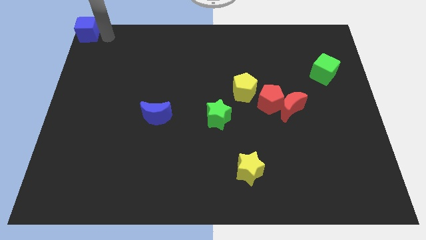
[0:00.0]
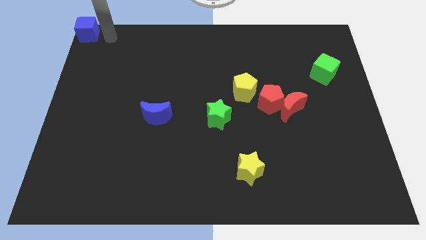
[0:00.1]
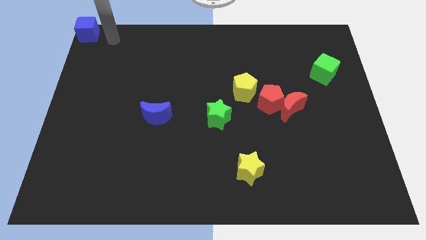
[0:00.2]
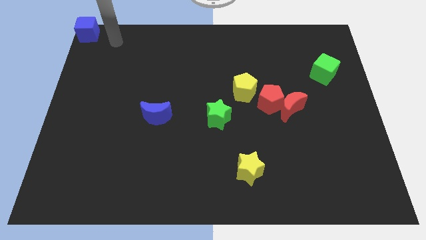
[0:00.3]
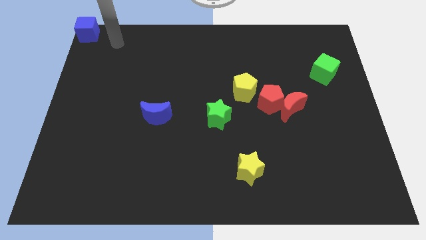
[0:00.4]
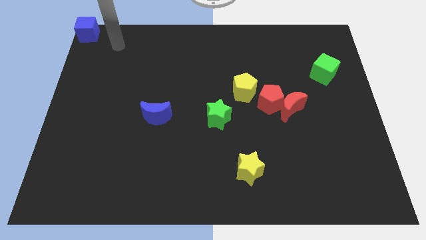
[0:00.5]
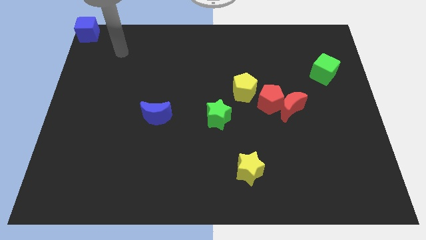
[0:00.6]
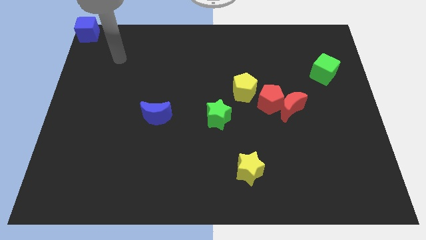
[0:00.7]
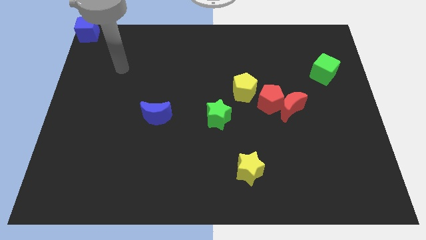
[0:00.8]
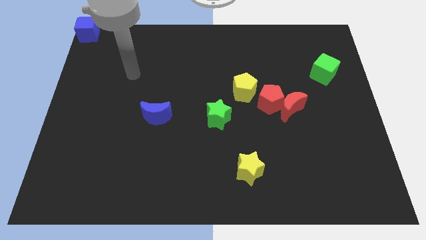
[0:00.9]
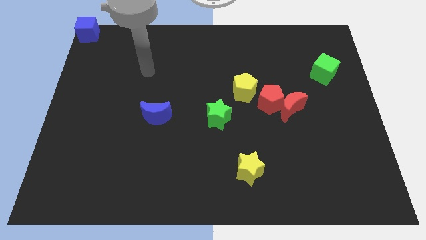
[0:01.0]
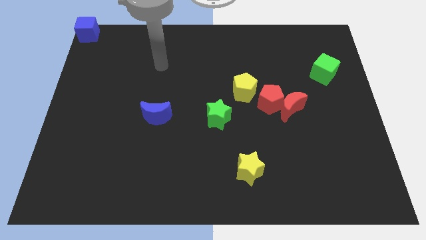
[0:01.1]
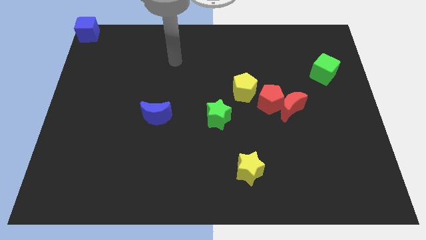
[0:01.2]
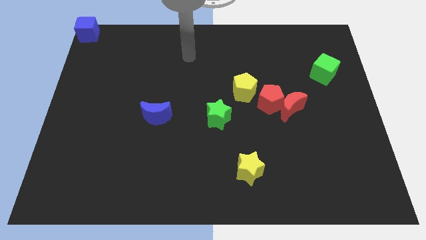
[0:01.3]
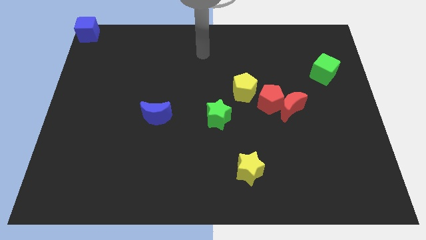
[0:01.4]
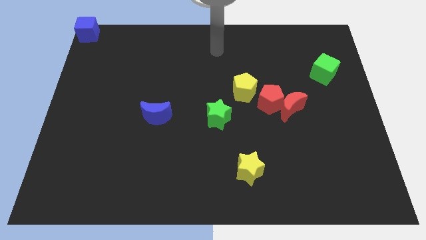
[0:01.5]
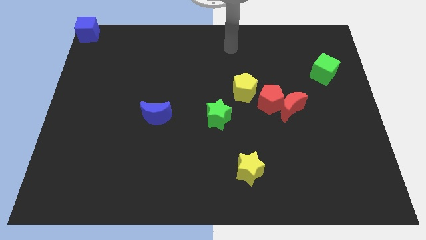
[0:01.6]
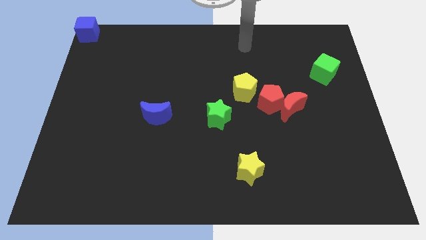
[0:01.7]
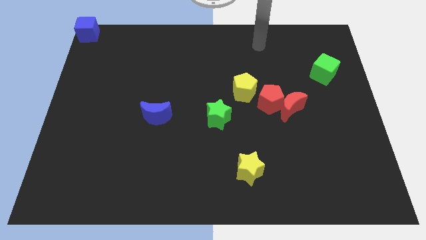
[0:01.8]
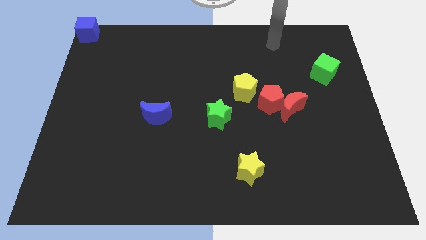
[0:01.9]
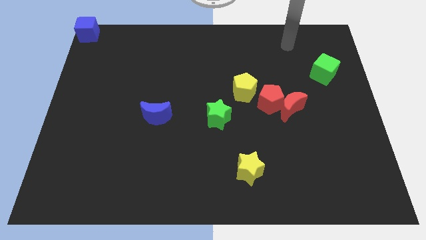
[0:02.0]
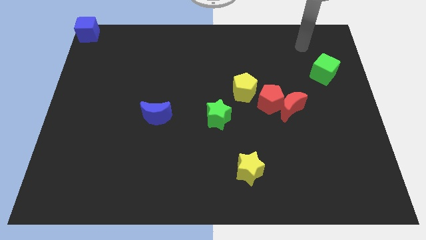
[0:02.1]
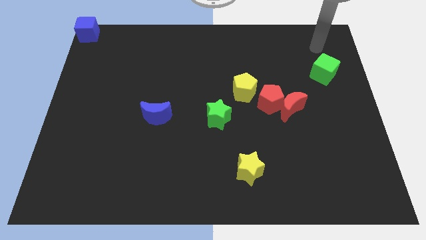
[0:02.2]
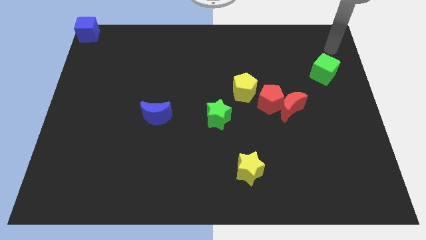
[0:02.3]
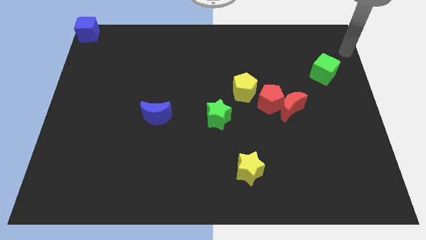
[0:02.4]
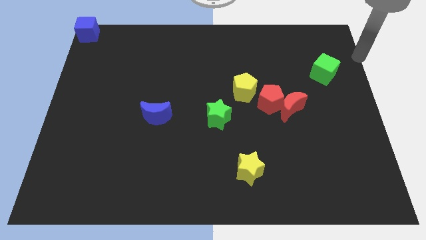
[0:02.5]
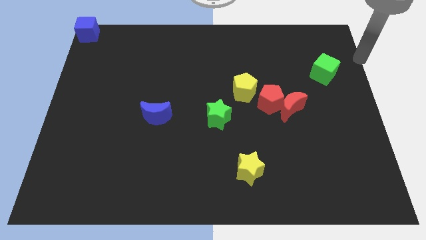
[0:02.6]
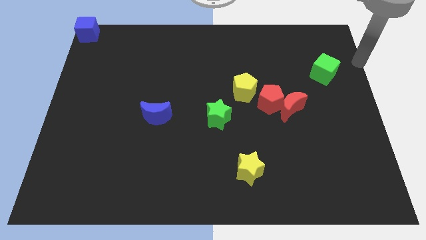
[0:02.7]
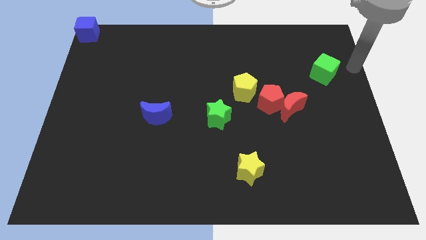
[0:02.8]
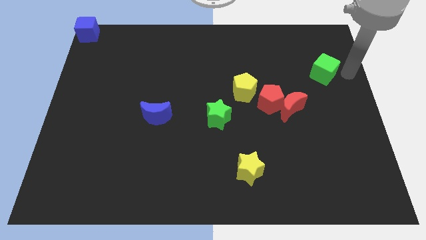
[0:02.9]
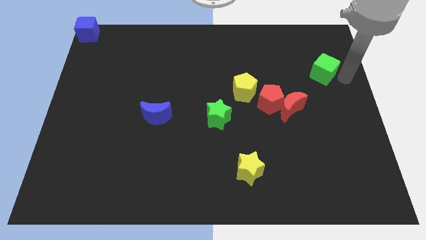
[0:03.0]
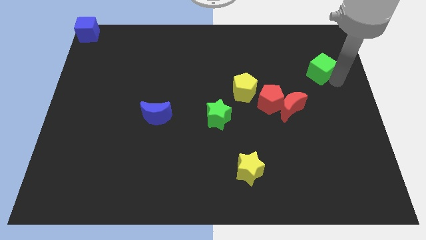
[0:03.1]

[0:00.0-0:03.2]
go near the green cubea

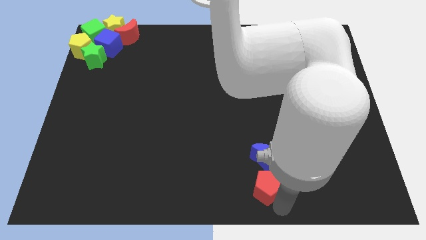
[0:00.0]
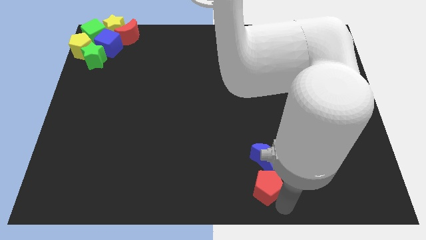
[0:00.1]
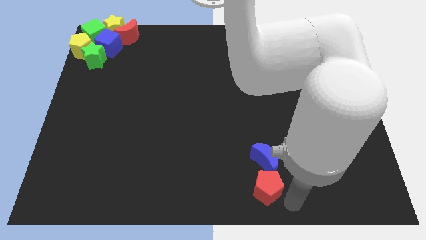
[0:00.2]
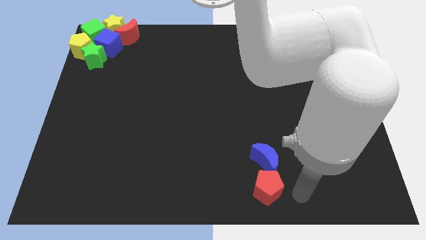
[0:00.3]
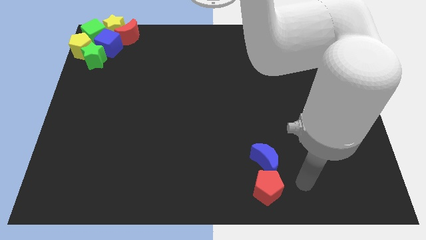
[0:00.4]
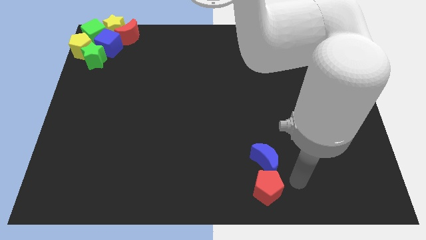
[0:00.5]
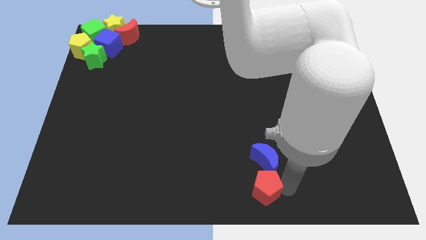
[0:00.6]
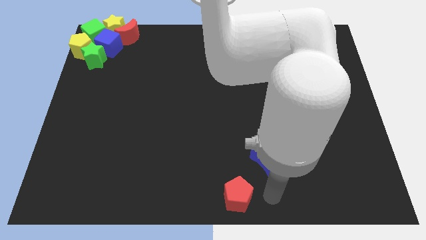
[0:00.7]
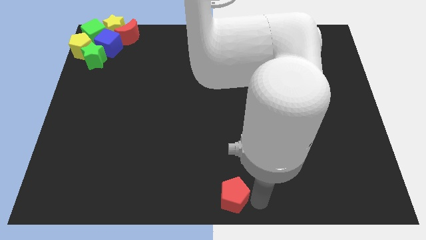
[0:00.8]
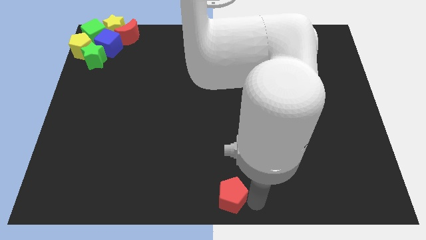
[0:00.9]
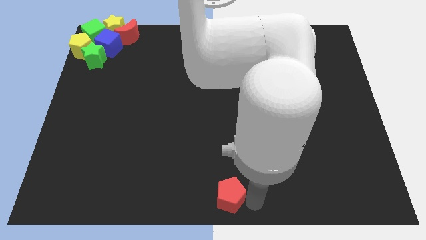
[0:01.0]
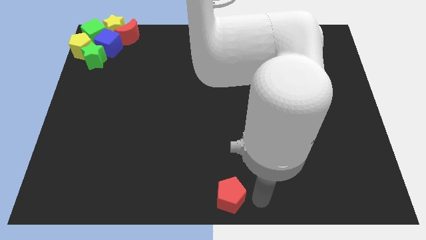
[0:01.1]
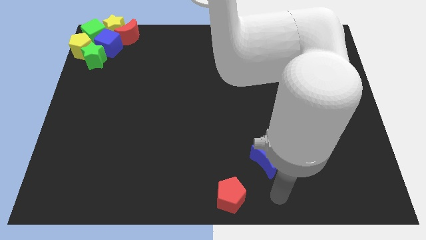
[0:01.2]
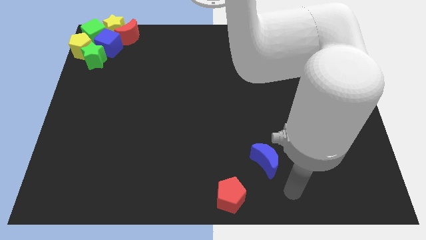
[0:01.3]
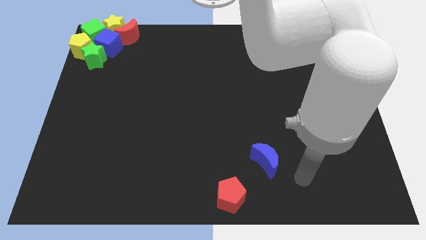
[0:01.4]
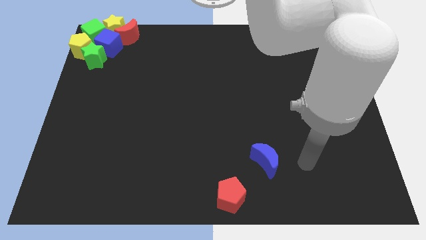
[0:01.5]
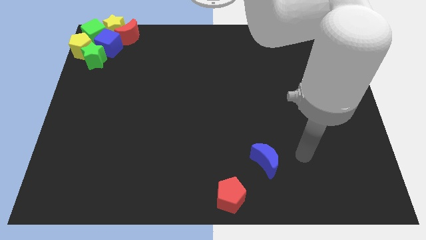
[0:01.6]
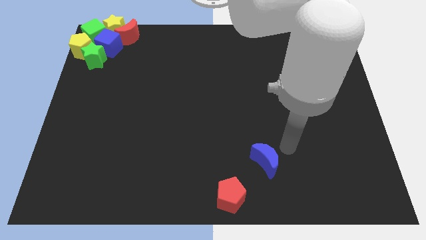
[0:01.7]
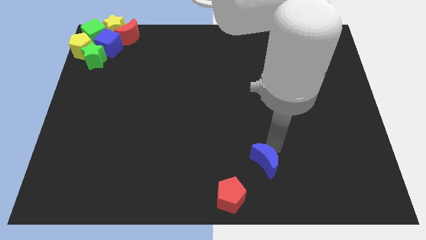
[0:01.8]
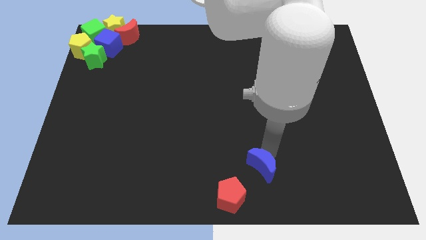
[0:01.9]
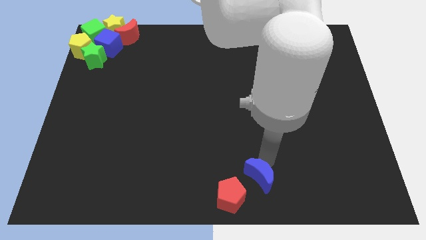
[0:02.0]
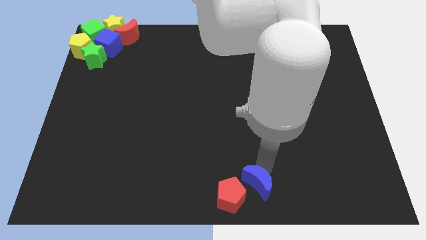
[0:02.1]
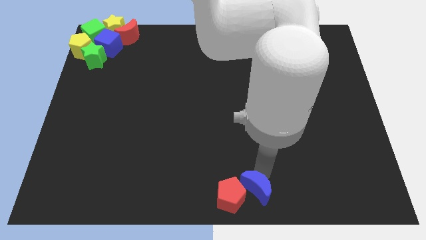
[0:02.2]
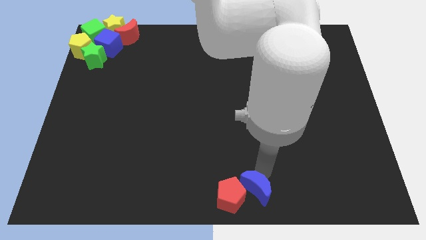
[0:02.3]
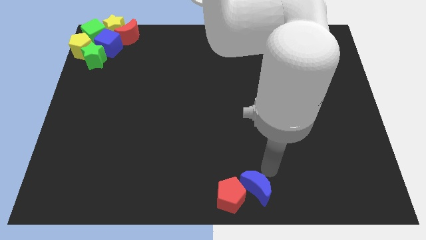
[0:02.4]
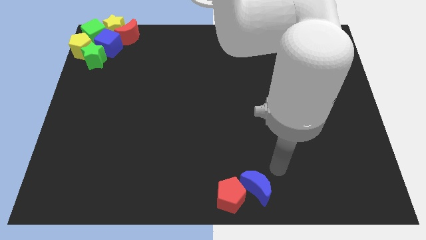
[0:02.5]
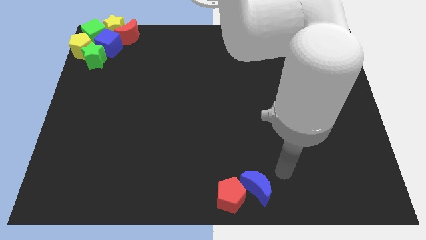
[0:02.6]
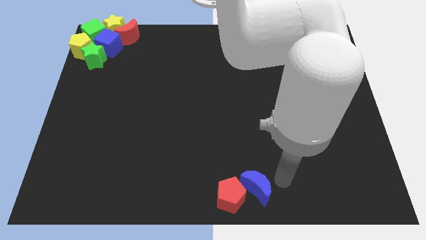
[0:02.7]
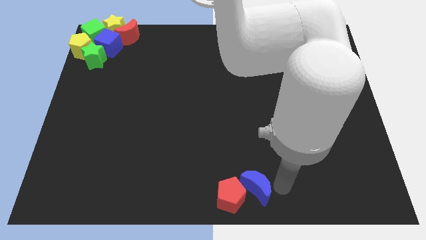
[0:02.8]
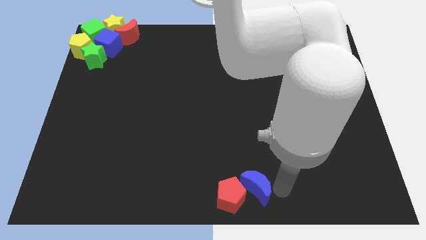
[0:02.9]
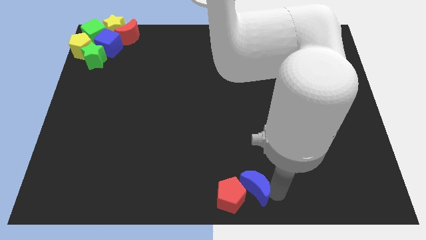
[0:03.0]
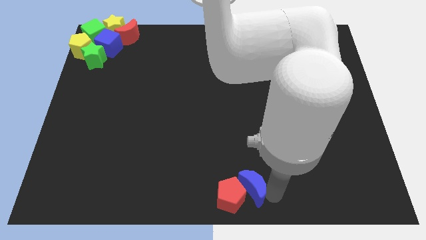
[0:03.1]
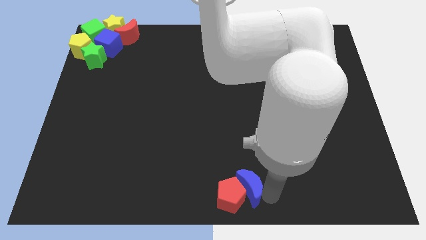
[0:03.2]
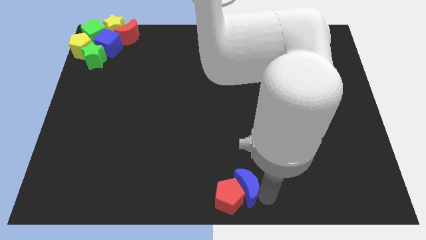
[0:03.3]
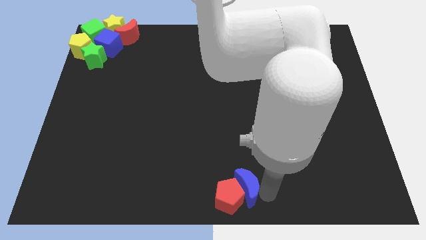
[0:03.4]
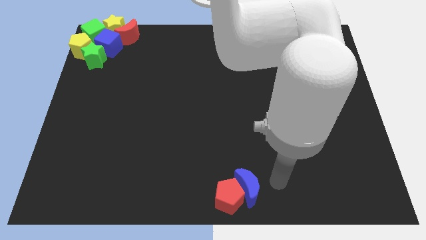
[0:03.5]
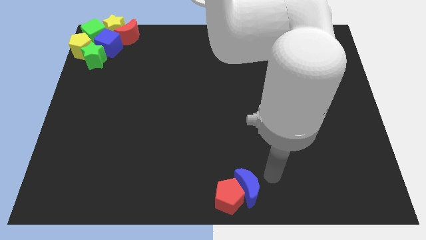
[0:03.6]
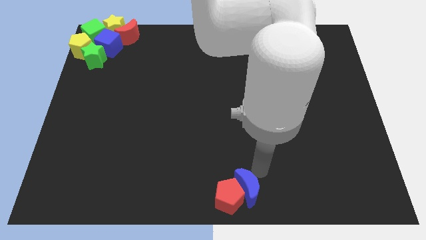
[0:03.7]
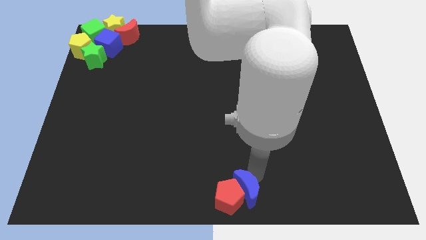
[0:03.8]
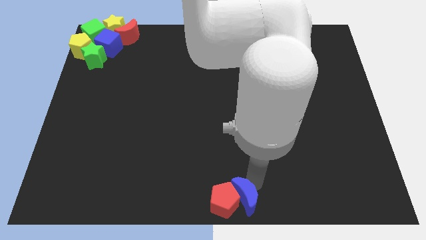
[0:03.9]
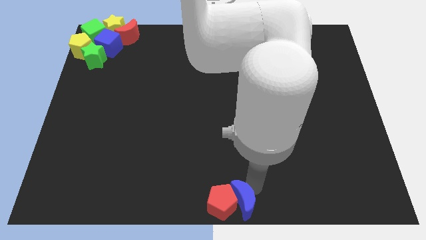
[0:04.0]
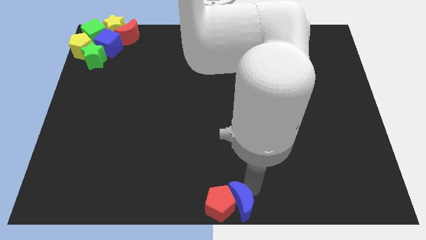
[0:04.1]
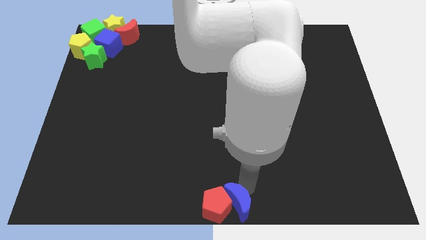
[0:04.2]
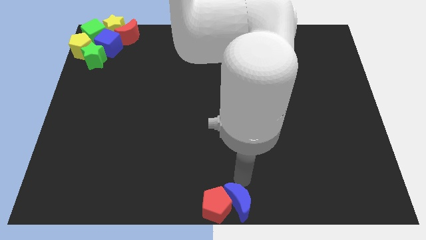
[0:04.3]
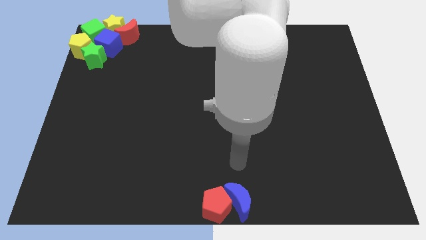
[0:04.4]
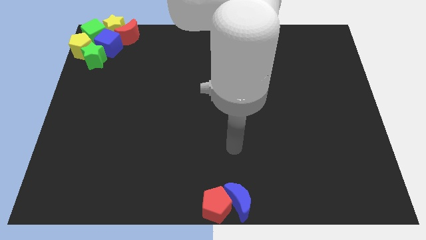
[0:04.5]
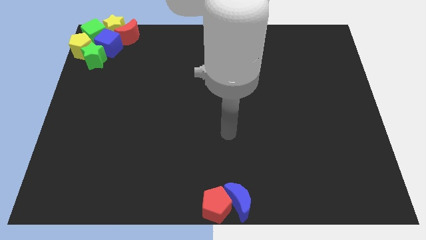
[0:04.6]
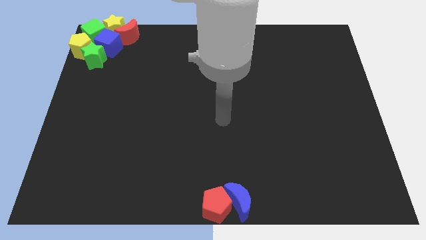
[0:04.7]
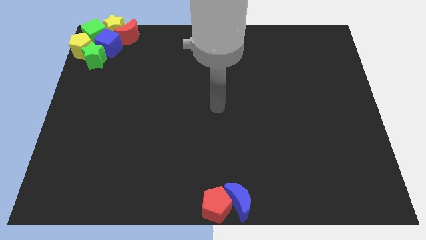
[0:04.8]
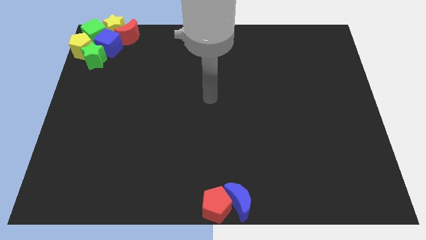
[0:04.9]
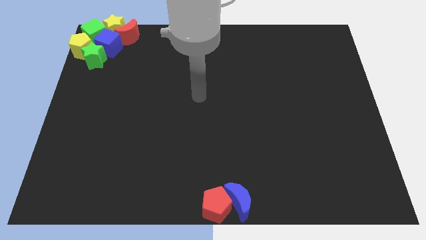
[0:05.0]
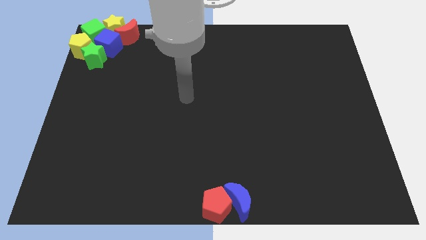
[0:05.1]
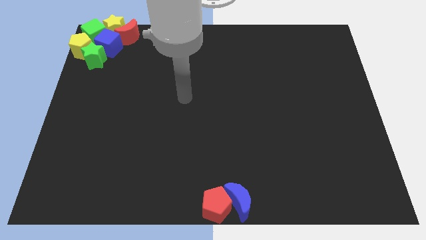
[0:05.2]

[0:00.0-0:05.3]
move the red pentagon and blue crescent to the bottom center

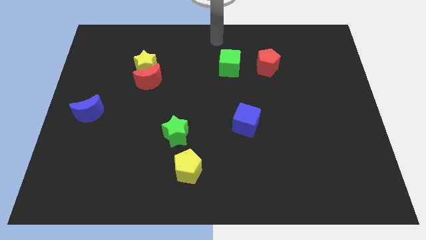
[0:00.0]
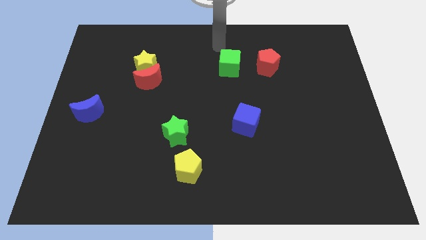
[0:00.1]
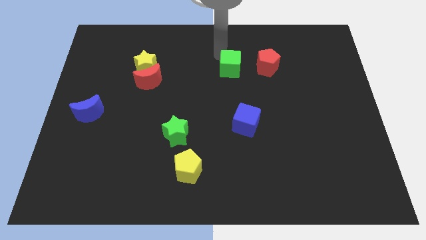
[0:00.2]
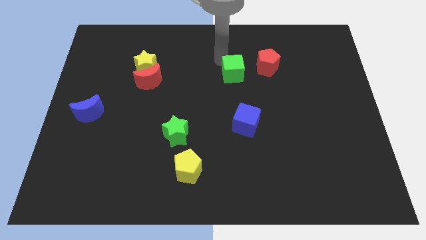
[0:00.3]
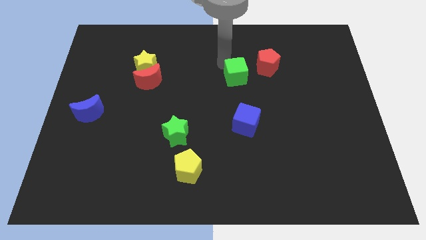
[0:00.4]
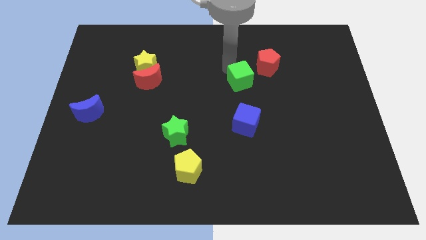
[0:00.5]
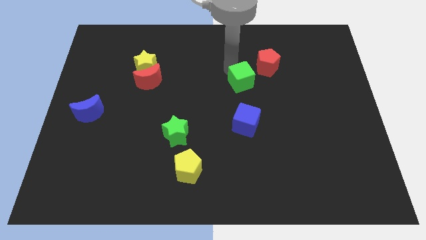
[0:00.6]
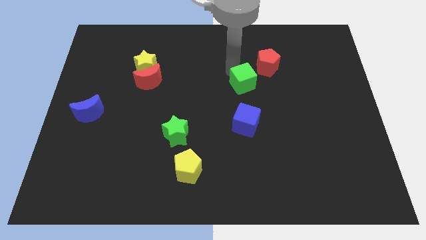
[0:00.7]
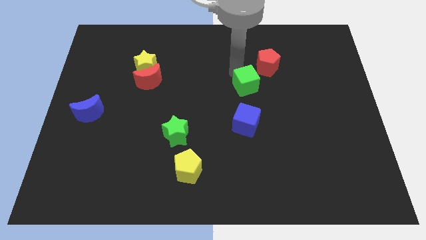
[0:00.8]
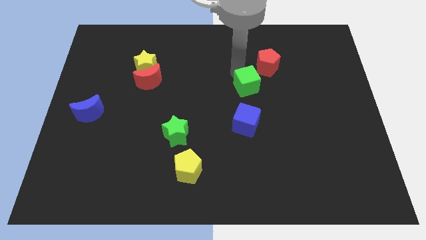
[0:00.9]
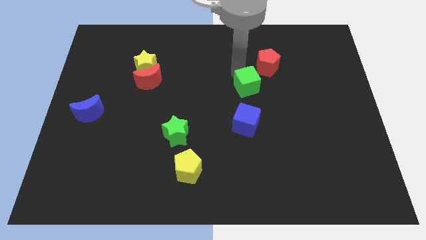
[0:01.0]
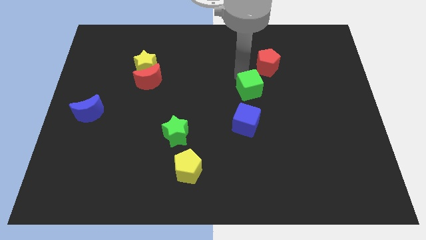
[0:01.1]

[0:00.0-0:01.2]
push the green cube to the top of the blue cube
